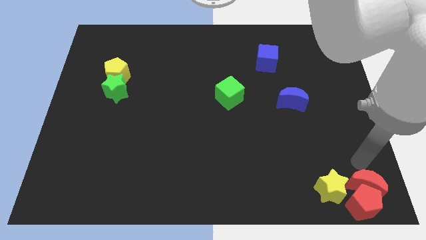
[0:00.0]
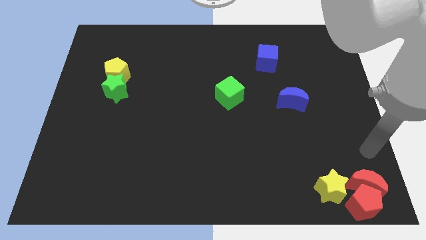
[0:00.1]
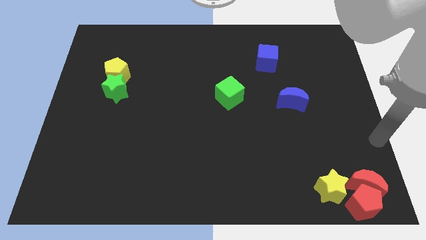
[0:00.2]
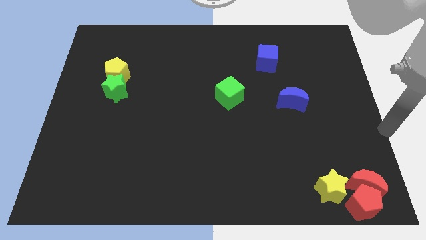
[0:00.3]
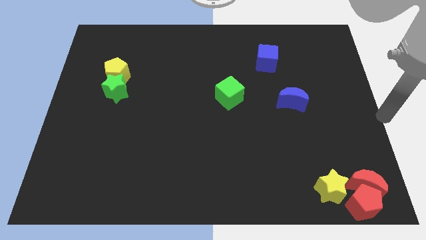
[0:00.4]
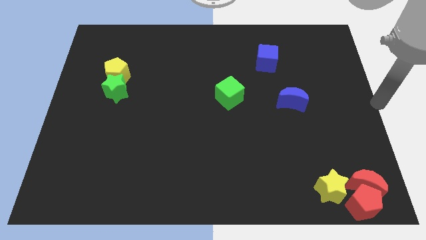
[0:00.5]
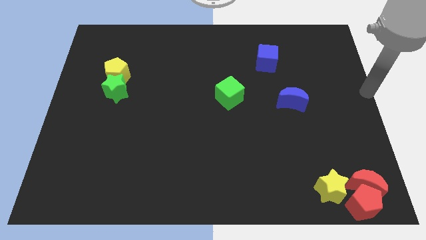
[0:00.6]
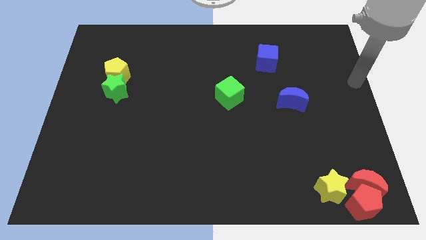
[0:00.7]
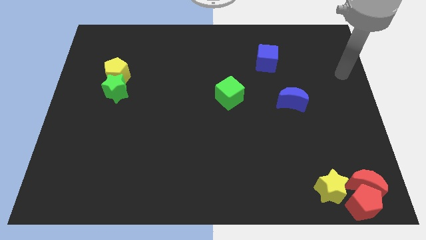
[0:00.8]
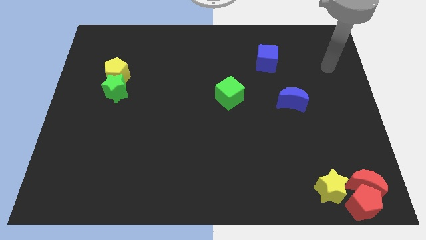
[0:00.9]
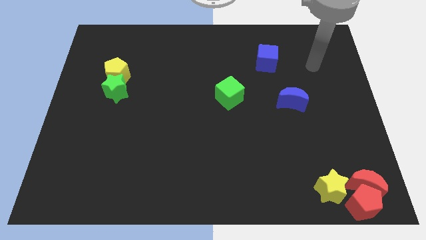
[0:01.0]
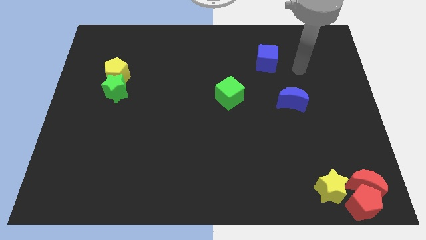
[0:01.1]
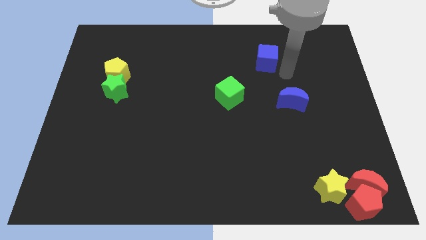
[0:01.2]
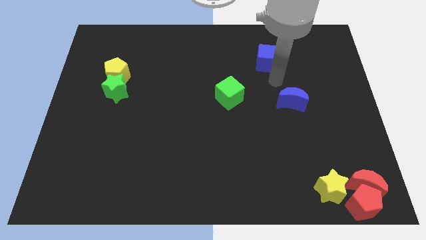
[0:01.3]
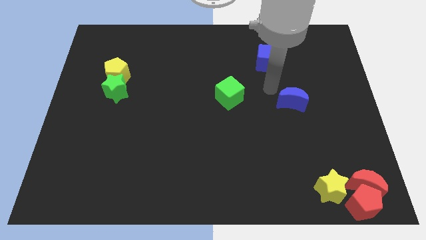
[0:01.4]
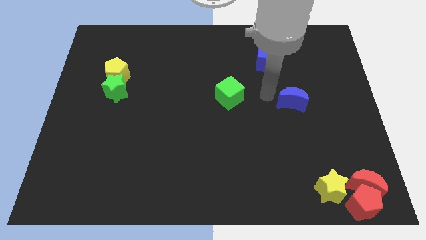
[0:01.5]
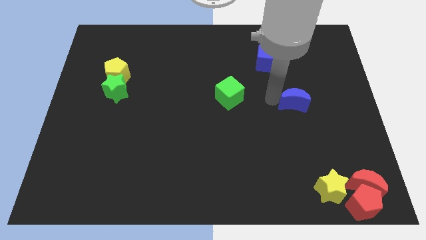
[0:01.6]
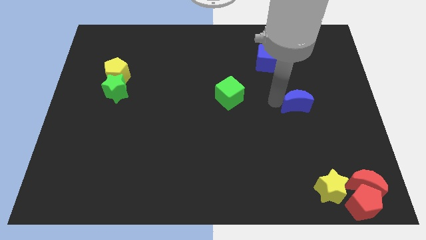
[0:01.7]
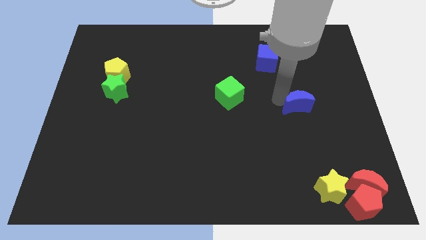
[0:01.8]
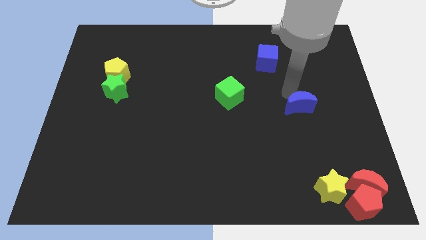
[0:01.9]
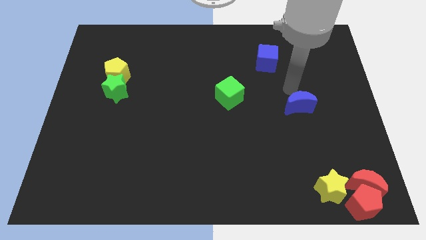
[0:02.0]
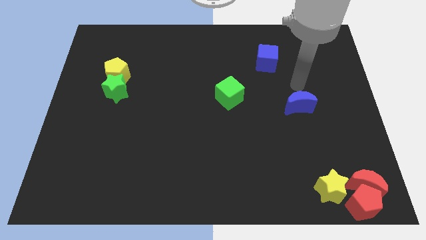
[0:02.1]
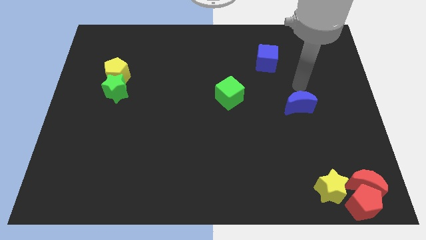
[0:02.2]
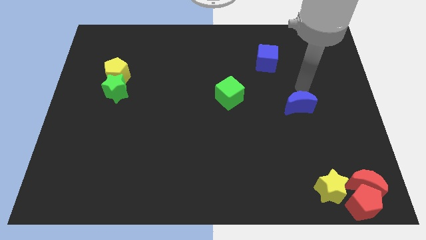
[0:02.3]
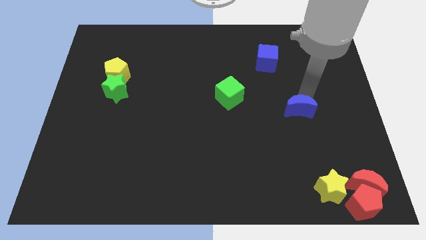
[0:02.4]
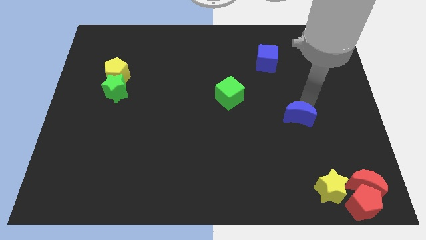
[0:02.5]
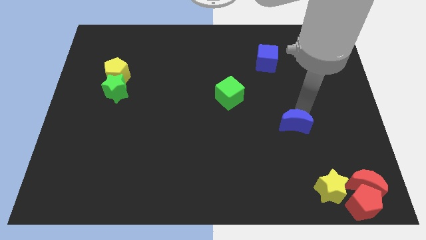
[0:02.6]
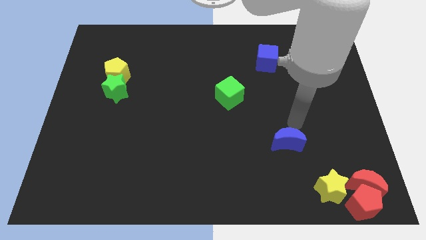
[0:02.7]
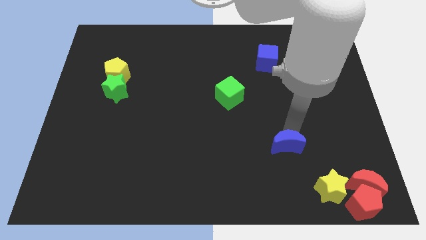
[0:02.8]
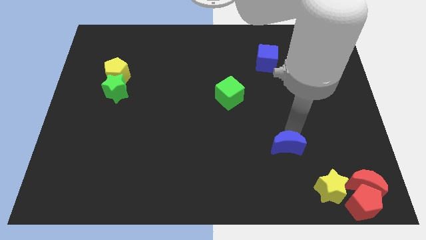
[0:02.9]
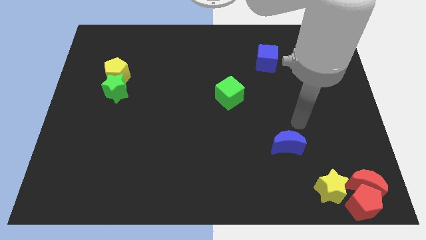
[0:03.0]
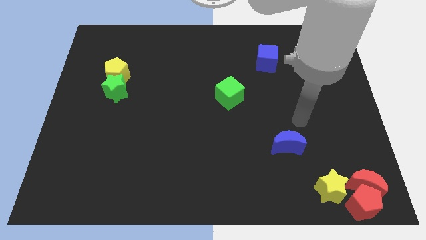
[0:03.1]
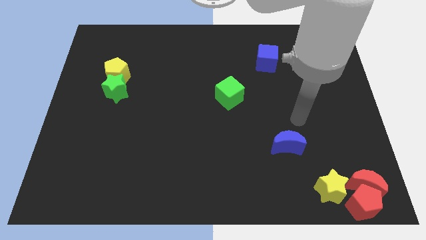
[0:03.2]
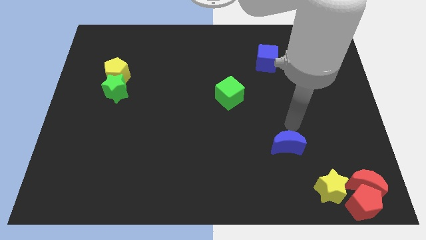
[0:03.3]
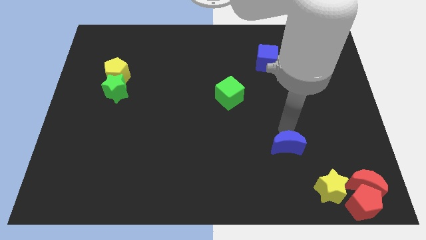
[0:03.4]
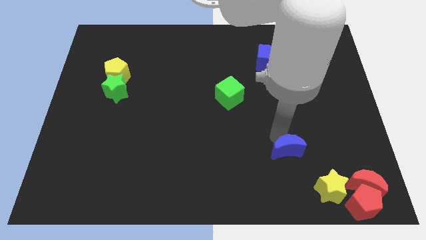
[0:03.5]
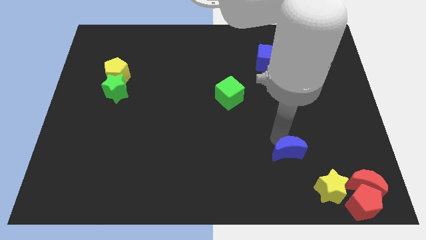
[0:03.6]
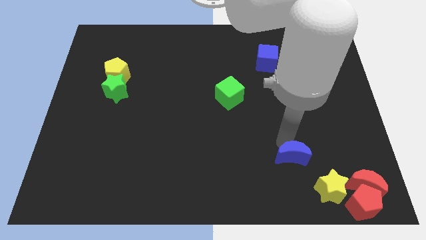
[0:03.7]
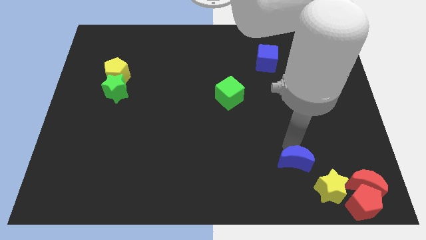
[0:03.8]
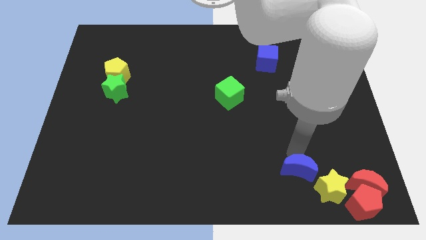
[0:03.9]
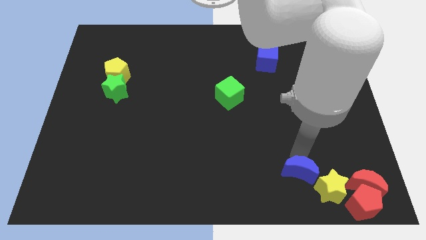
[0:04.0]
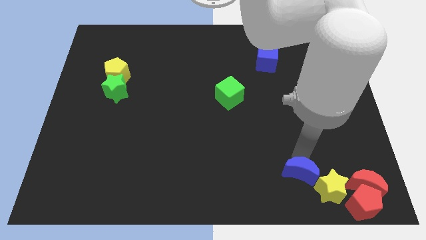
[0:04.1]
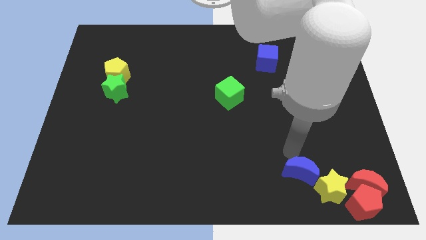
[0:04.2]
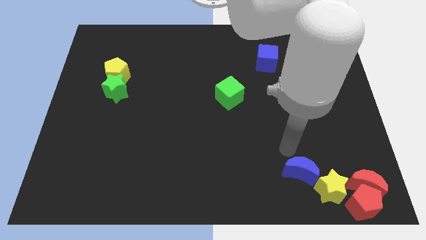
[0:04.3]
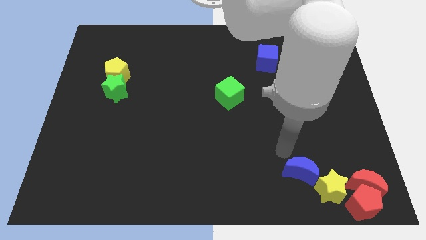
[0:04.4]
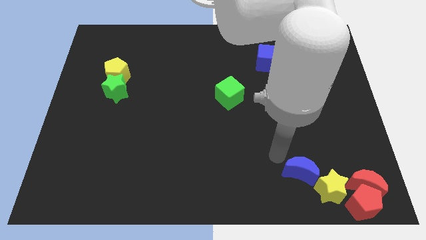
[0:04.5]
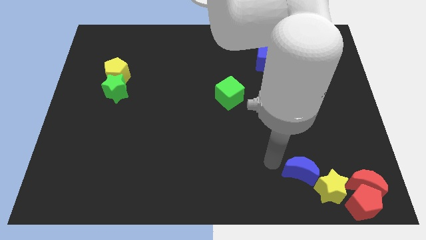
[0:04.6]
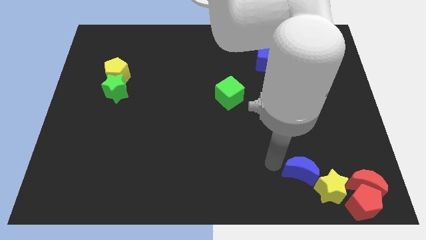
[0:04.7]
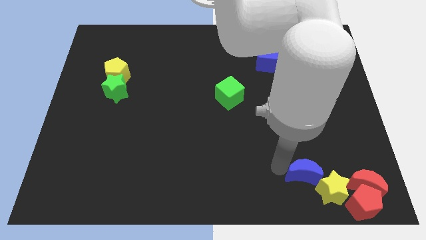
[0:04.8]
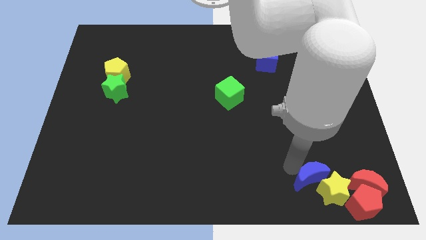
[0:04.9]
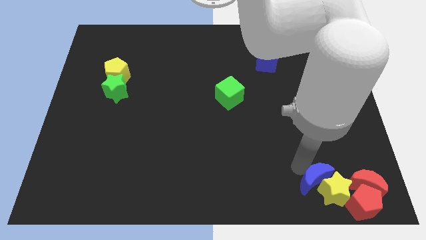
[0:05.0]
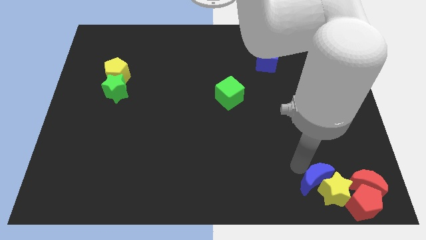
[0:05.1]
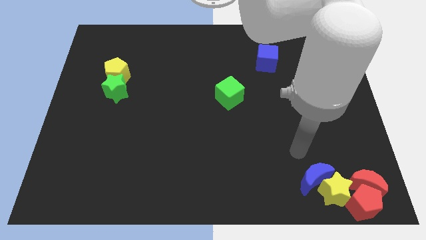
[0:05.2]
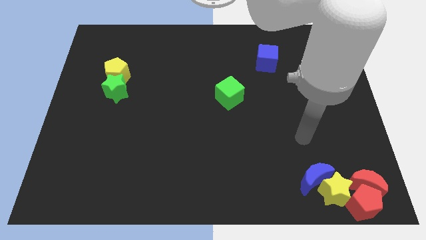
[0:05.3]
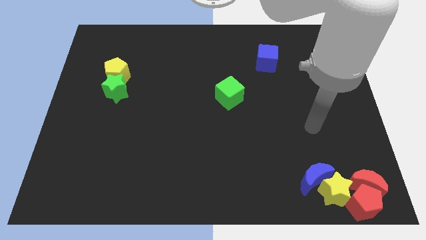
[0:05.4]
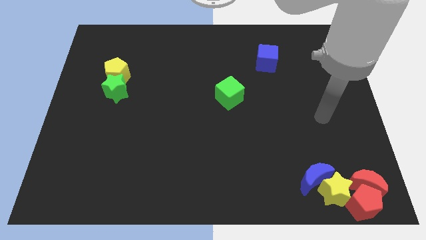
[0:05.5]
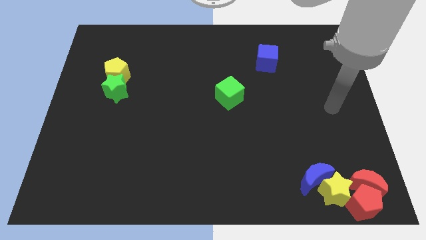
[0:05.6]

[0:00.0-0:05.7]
move the blue moon towards the yellow star

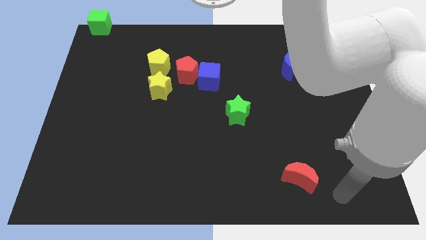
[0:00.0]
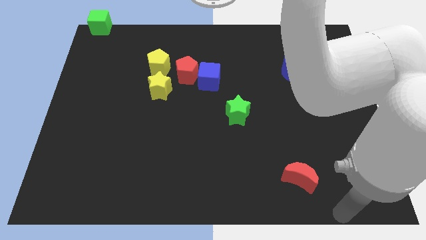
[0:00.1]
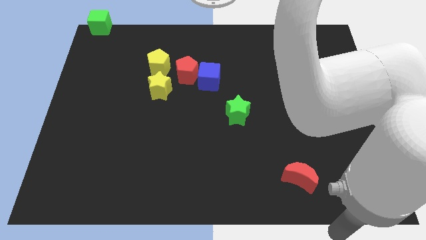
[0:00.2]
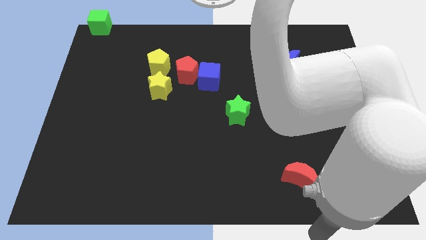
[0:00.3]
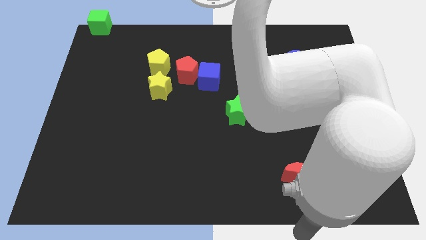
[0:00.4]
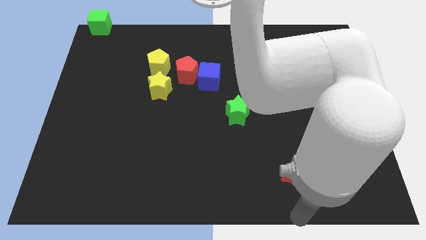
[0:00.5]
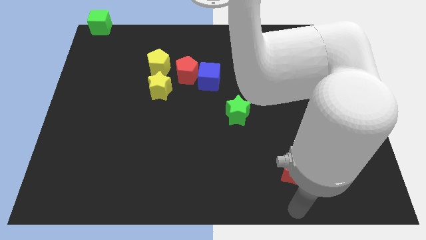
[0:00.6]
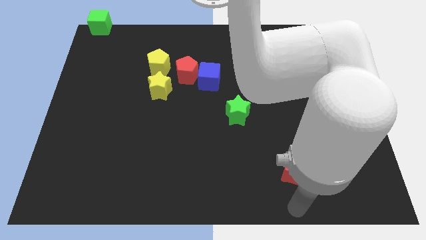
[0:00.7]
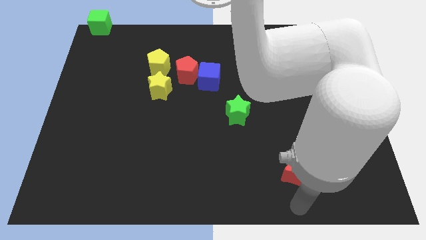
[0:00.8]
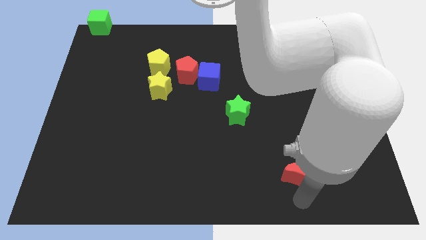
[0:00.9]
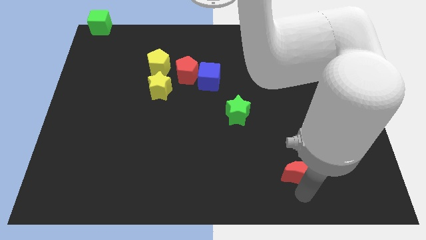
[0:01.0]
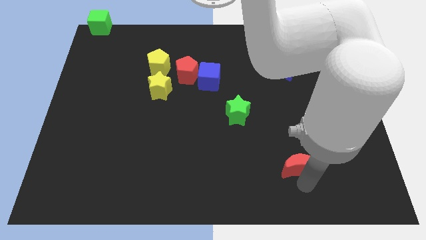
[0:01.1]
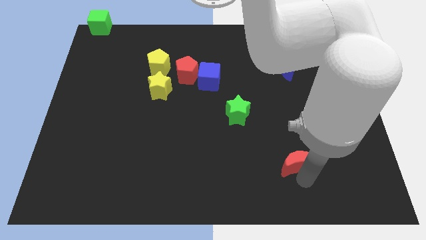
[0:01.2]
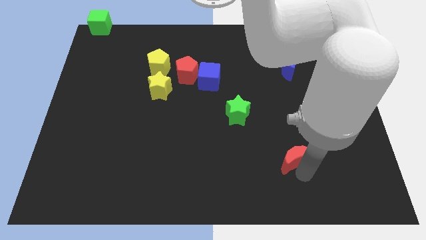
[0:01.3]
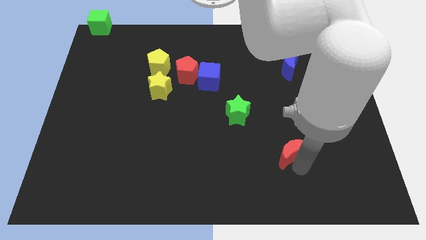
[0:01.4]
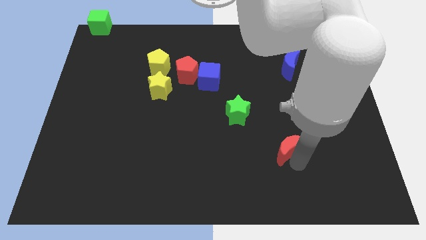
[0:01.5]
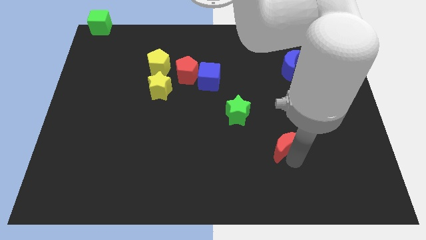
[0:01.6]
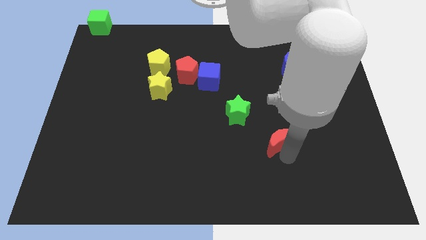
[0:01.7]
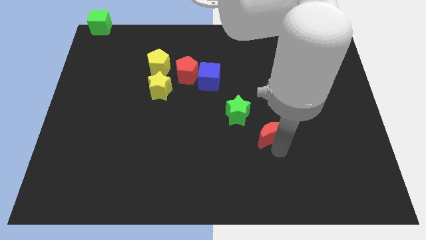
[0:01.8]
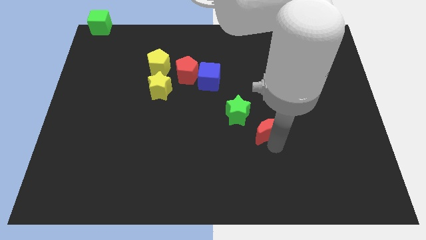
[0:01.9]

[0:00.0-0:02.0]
push the red moon towards the top side of the board

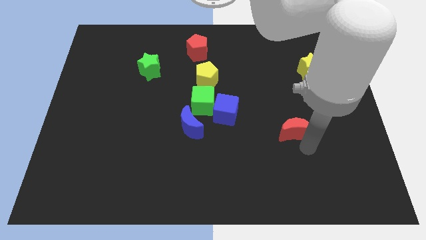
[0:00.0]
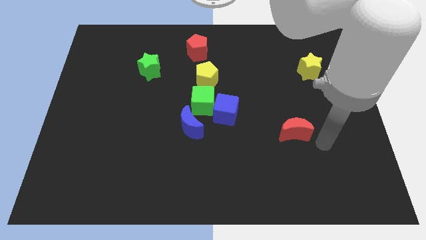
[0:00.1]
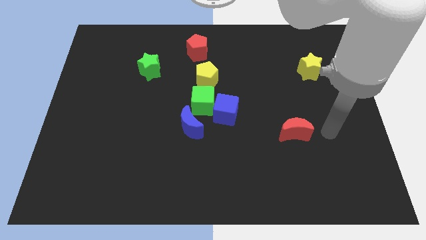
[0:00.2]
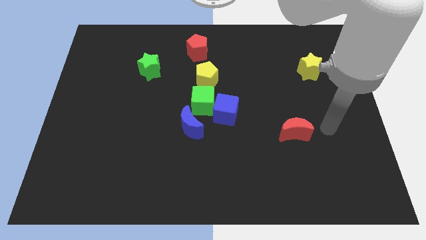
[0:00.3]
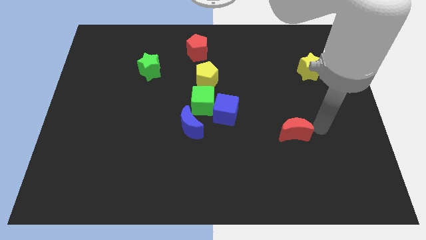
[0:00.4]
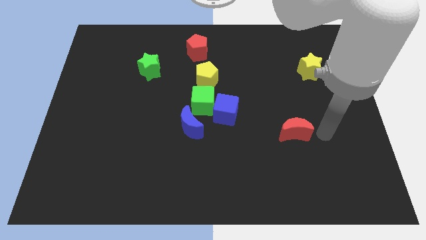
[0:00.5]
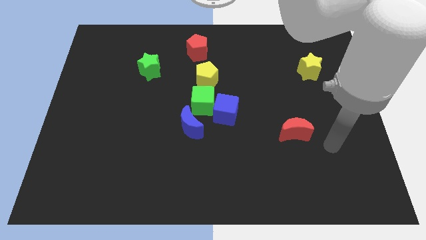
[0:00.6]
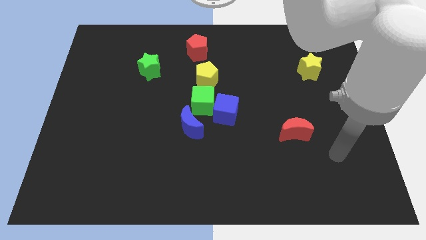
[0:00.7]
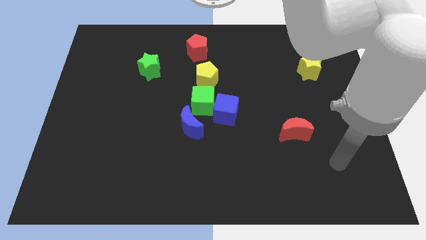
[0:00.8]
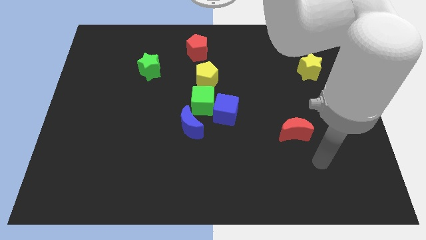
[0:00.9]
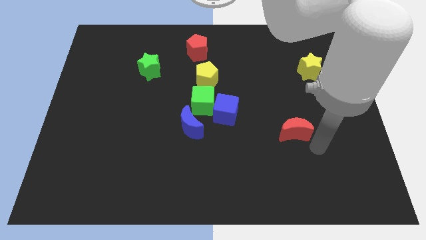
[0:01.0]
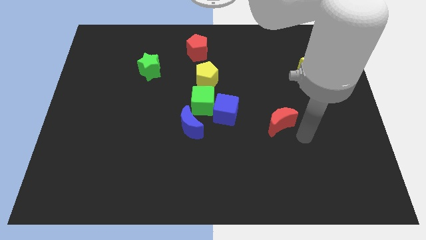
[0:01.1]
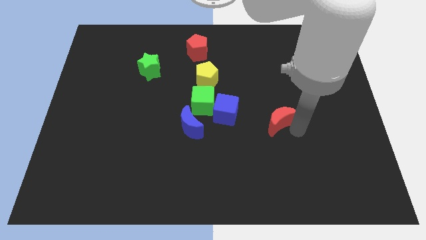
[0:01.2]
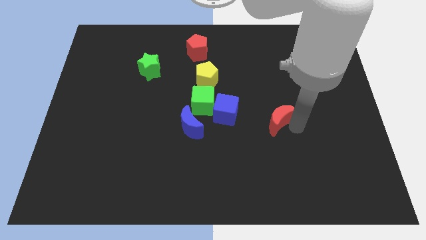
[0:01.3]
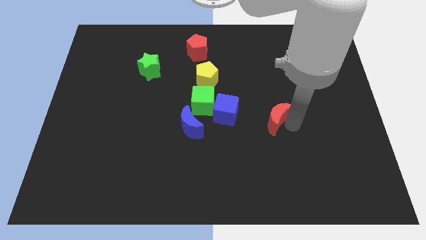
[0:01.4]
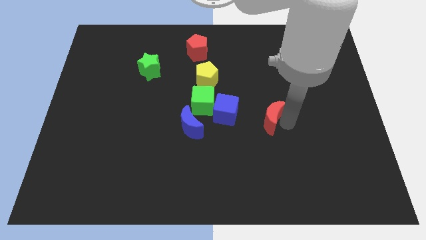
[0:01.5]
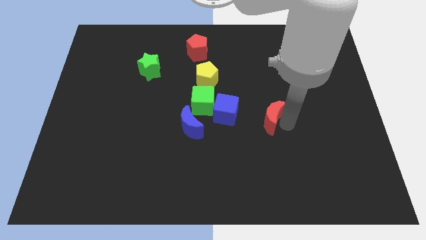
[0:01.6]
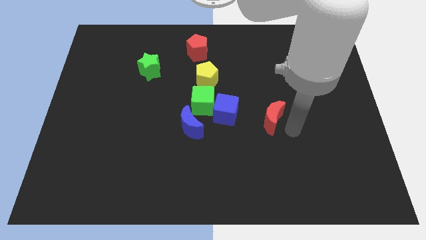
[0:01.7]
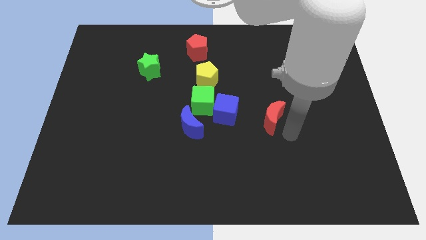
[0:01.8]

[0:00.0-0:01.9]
place red moon to the right of blue cube
